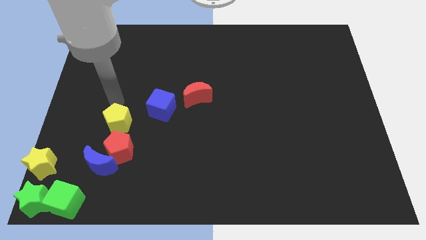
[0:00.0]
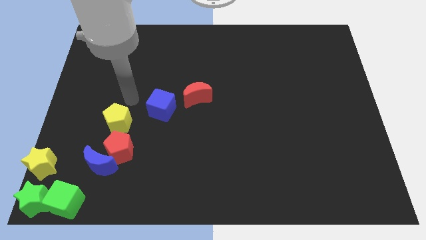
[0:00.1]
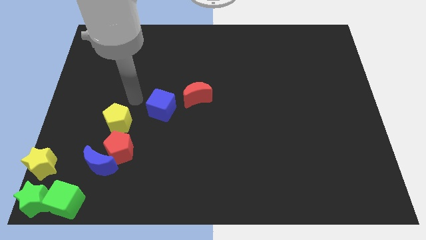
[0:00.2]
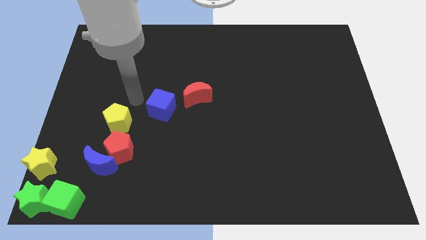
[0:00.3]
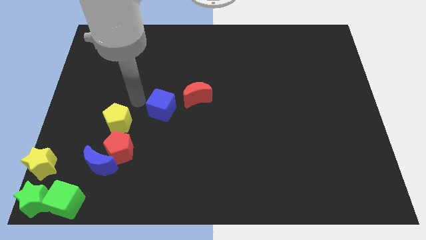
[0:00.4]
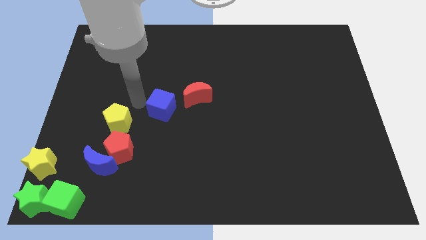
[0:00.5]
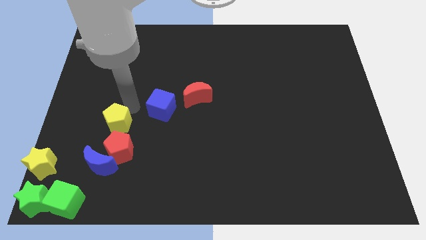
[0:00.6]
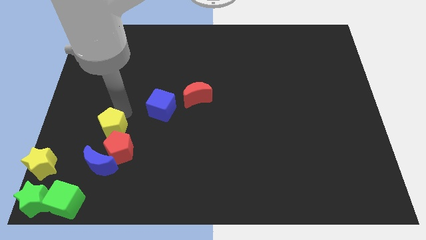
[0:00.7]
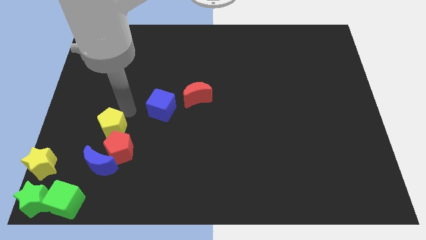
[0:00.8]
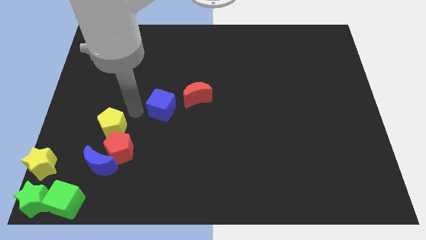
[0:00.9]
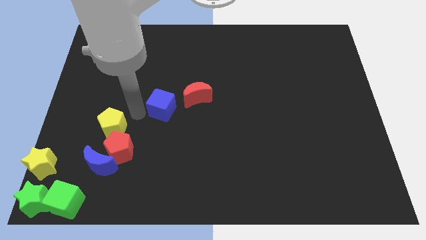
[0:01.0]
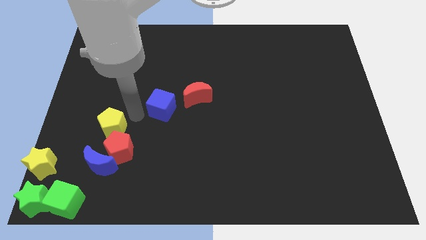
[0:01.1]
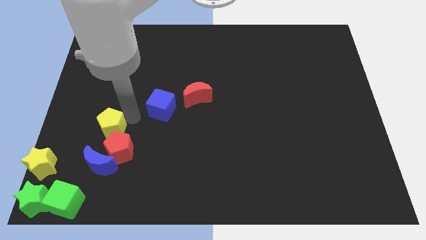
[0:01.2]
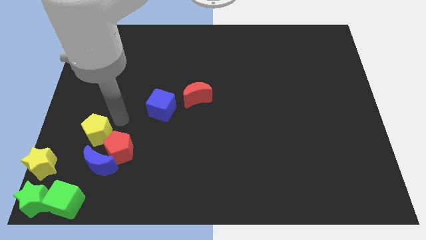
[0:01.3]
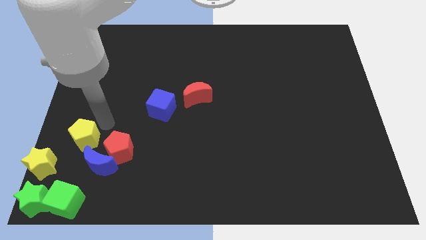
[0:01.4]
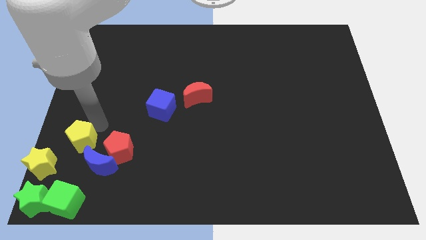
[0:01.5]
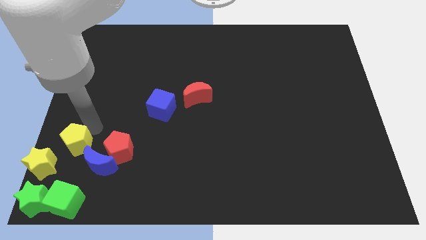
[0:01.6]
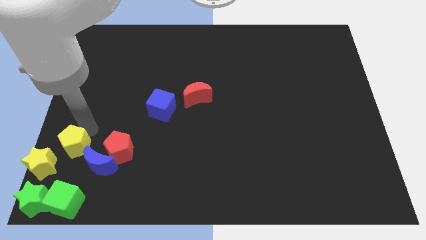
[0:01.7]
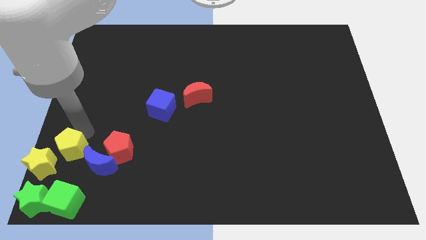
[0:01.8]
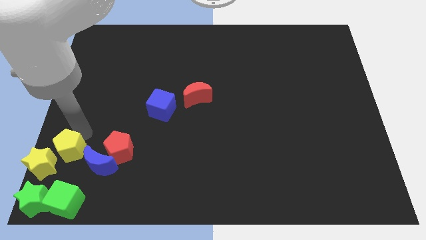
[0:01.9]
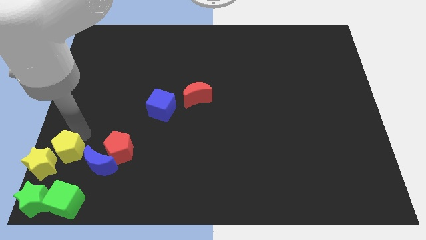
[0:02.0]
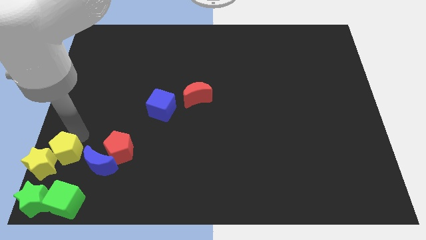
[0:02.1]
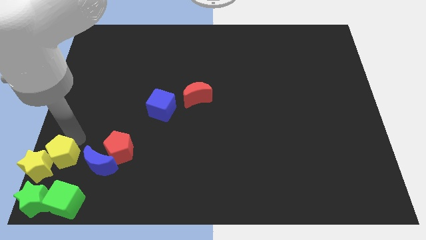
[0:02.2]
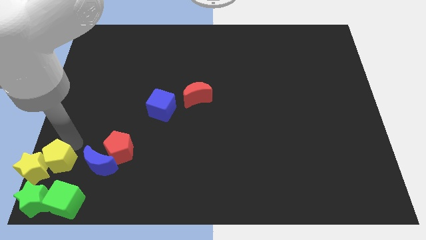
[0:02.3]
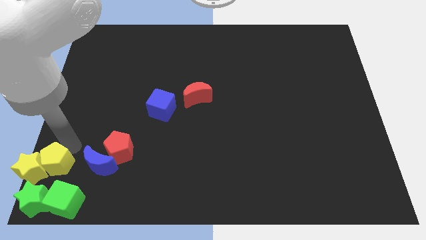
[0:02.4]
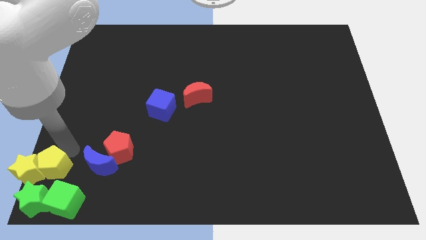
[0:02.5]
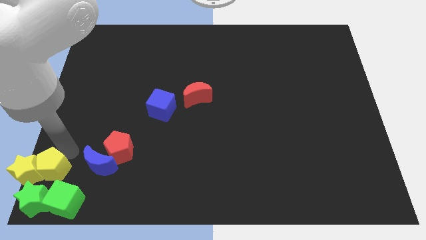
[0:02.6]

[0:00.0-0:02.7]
place the yellow pentagon near yellow star at the bottom left side of the board

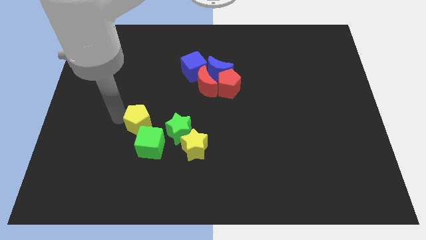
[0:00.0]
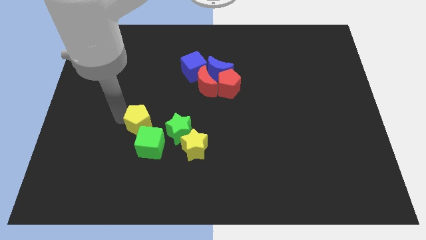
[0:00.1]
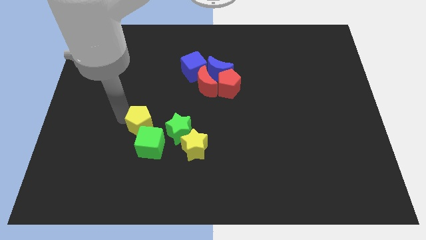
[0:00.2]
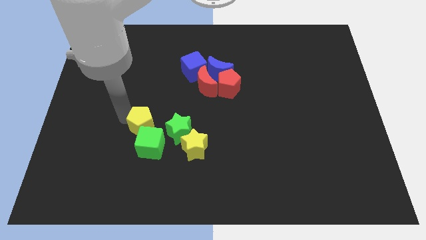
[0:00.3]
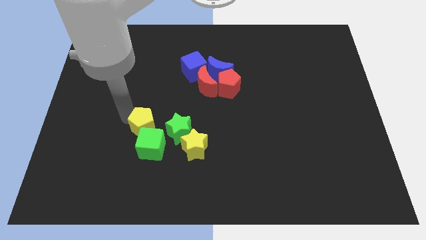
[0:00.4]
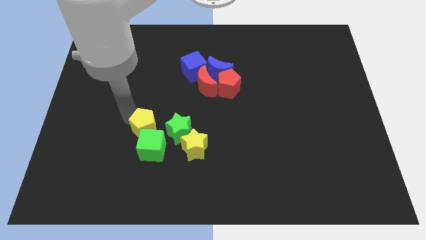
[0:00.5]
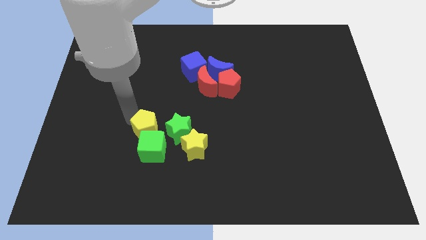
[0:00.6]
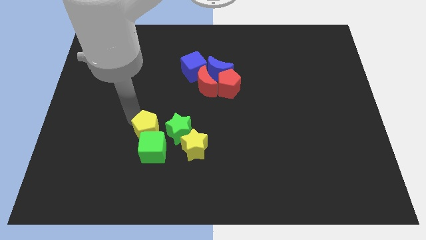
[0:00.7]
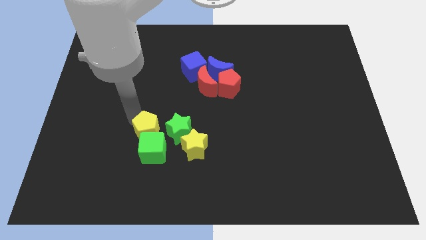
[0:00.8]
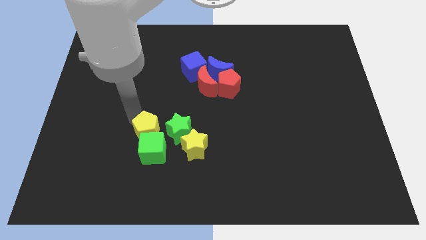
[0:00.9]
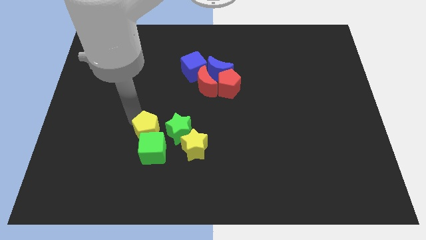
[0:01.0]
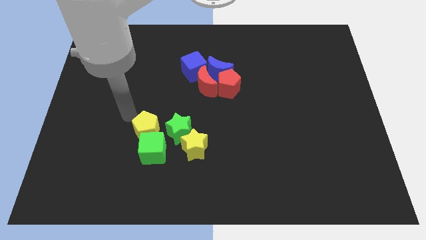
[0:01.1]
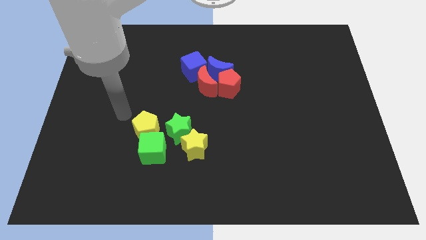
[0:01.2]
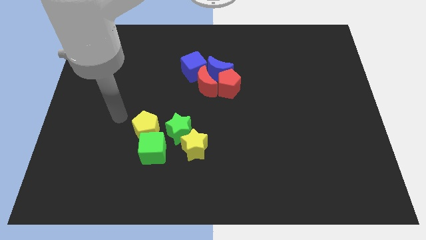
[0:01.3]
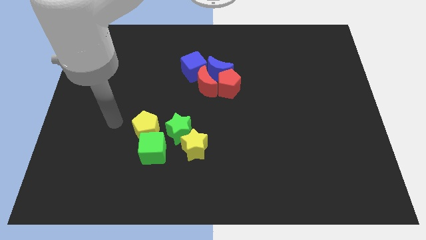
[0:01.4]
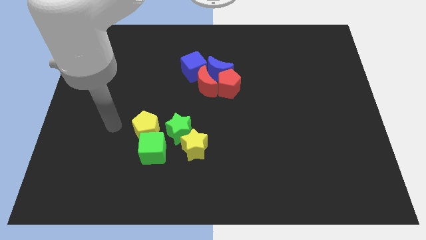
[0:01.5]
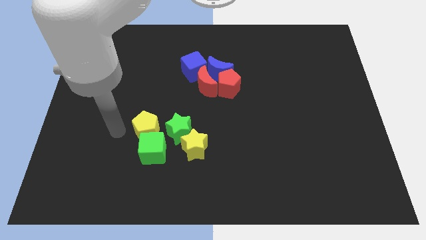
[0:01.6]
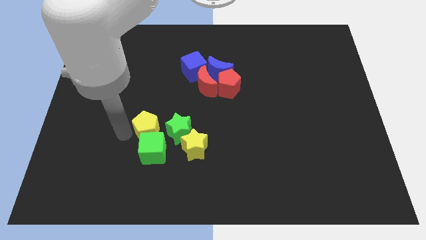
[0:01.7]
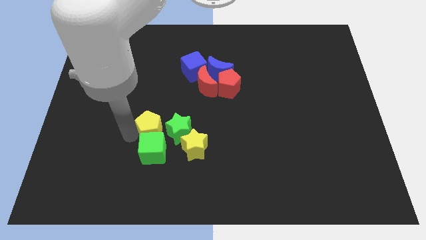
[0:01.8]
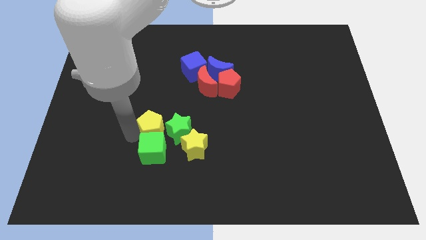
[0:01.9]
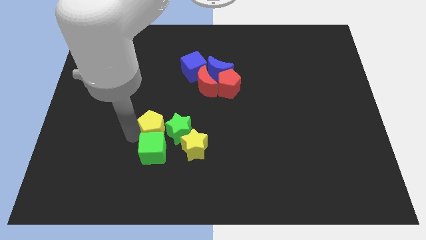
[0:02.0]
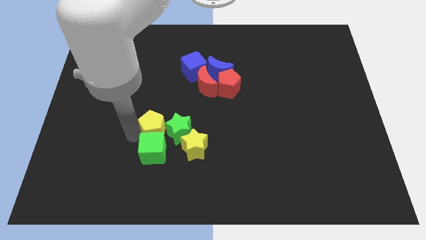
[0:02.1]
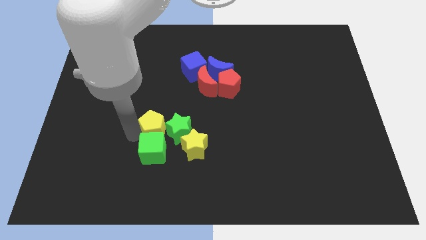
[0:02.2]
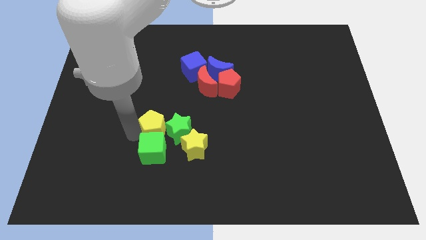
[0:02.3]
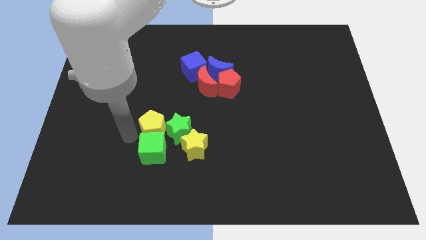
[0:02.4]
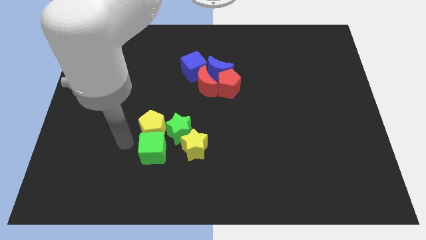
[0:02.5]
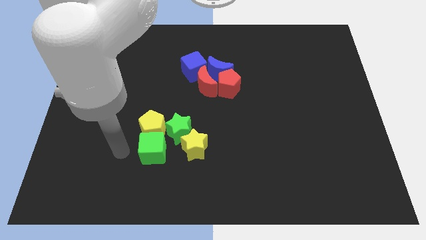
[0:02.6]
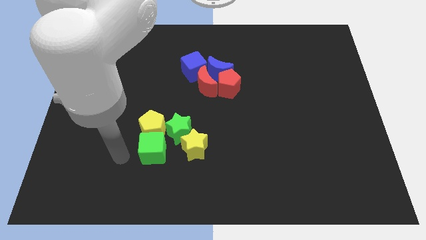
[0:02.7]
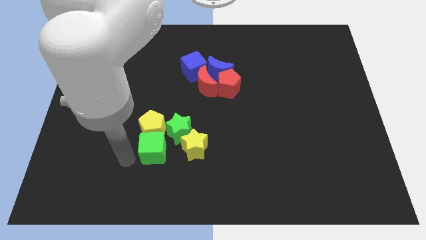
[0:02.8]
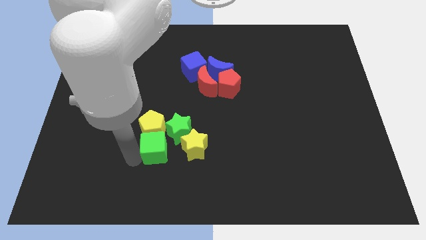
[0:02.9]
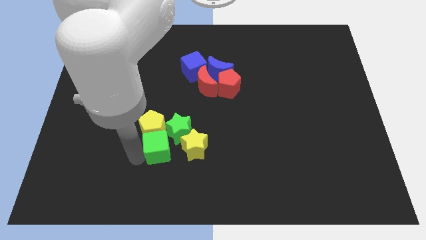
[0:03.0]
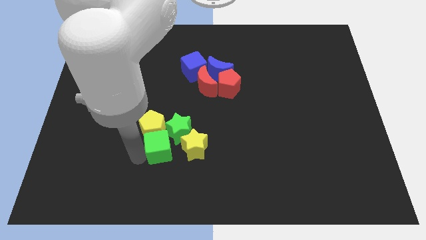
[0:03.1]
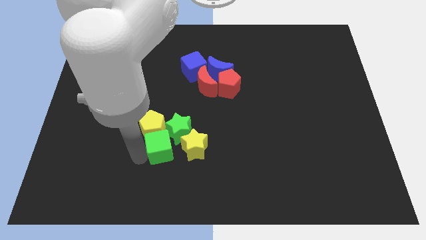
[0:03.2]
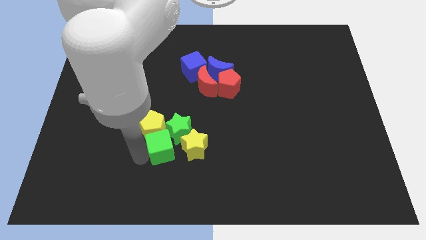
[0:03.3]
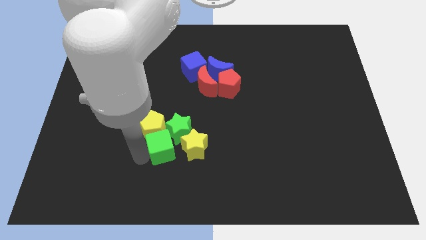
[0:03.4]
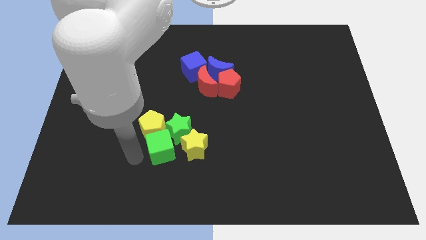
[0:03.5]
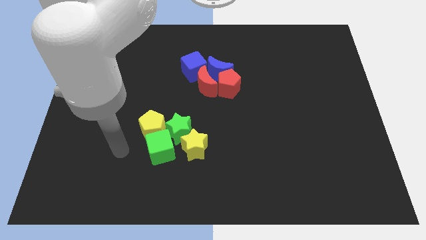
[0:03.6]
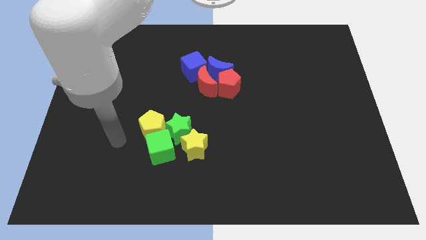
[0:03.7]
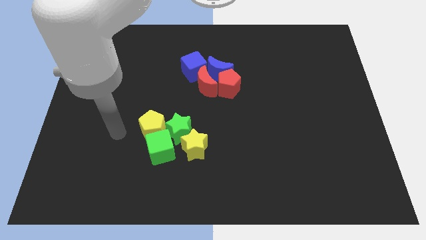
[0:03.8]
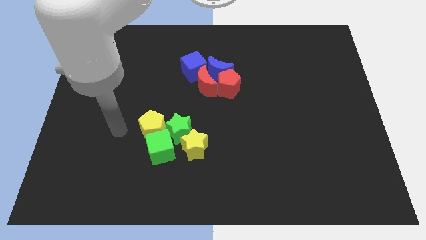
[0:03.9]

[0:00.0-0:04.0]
move the yellow pentagon and green cube left side of the green star

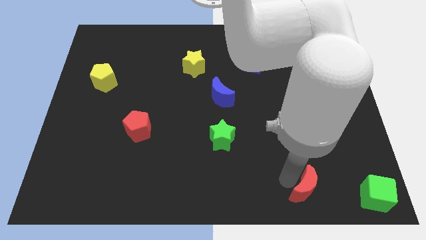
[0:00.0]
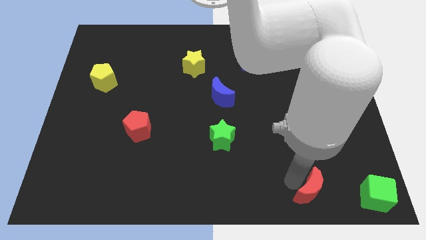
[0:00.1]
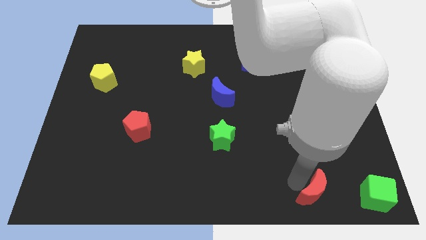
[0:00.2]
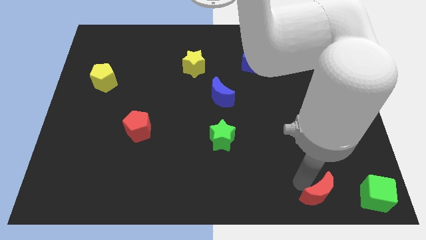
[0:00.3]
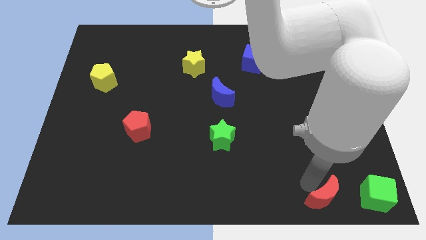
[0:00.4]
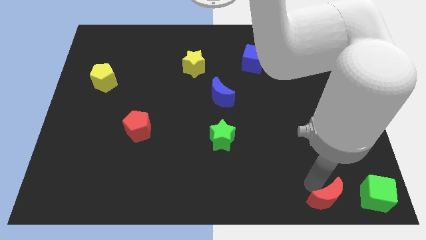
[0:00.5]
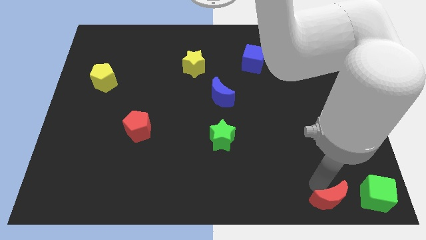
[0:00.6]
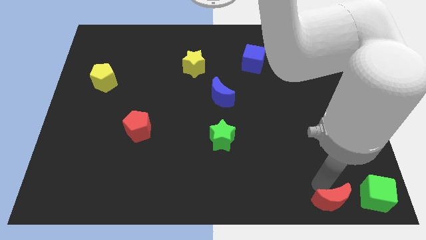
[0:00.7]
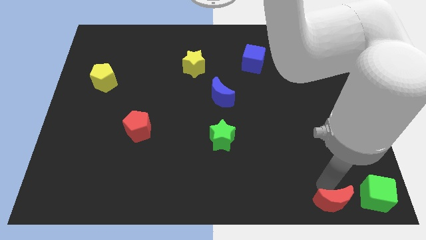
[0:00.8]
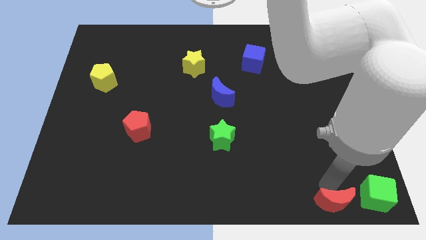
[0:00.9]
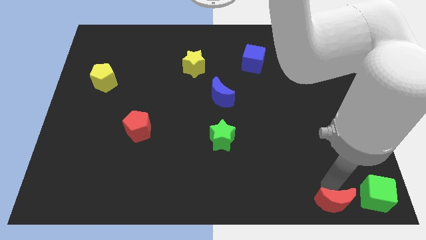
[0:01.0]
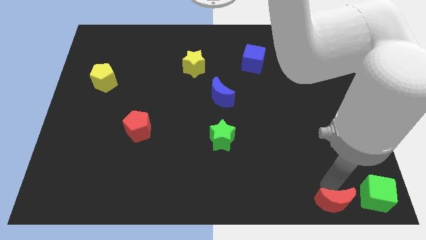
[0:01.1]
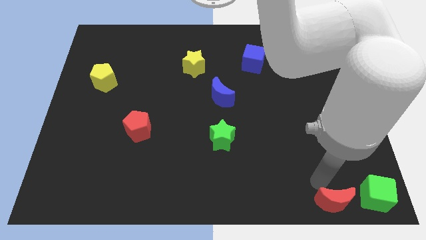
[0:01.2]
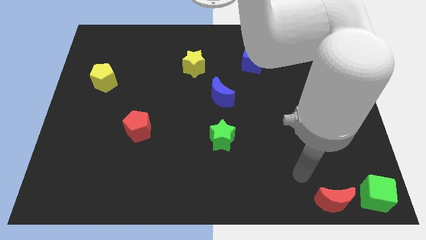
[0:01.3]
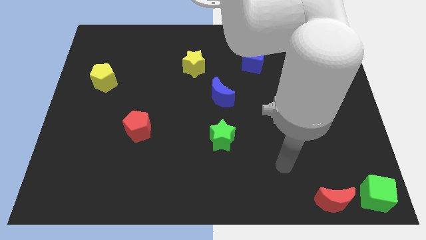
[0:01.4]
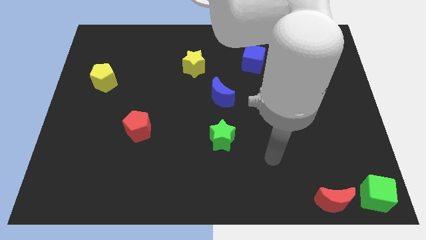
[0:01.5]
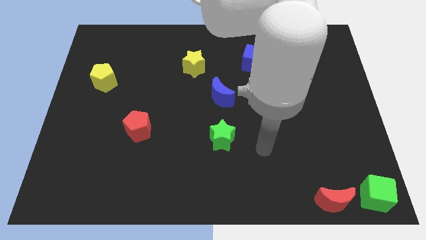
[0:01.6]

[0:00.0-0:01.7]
place the red moon to the left of the green cube

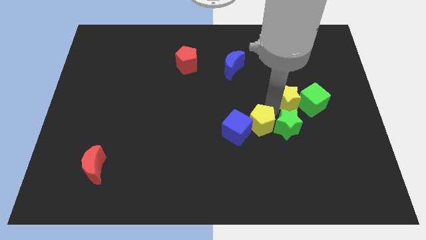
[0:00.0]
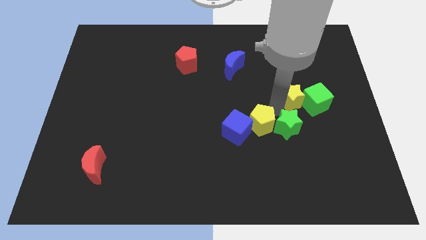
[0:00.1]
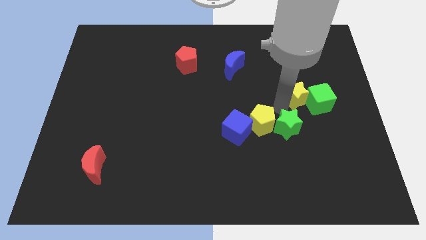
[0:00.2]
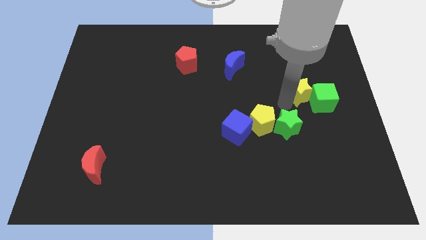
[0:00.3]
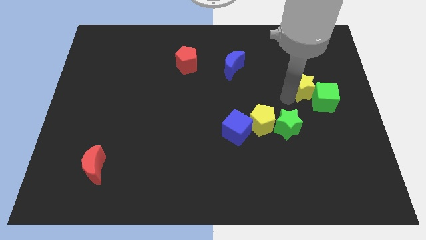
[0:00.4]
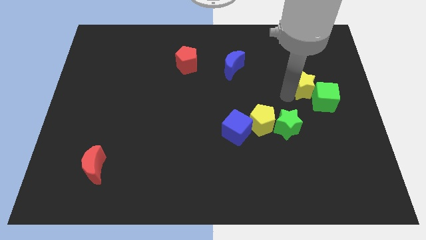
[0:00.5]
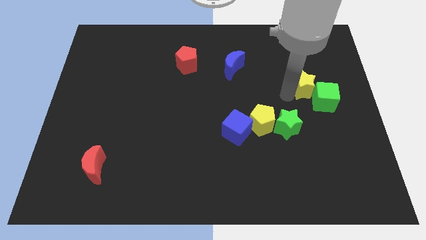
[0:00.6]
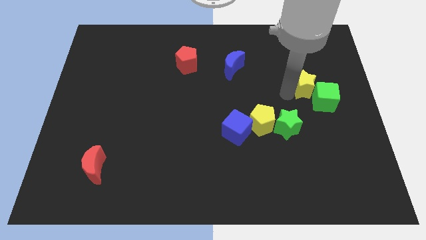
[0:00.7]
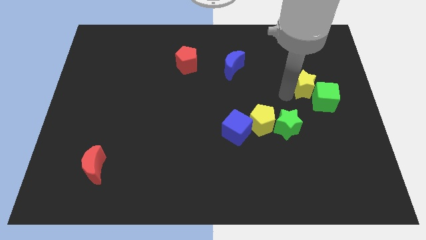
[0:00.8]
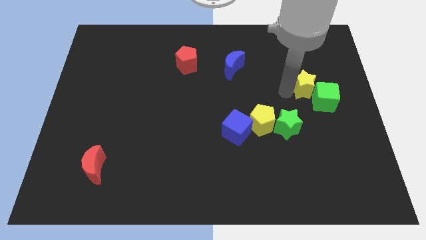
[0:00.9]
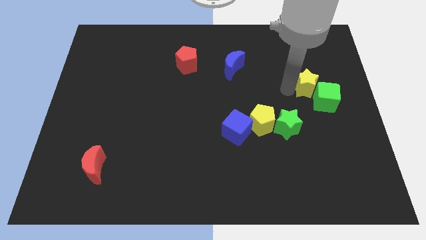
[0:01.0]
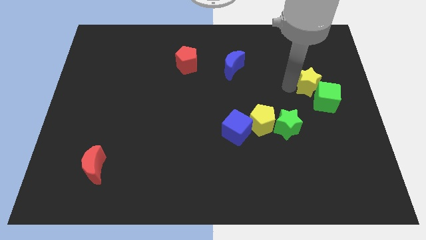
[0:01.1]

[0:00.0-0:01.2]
place the yellow star towards right center
